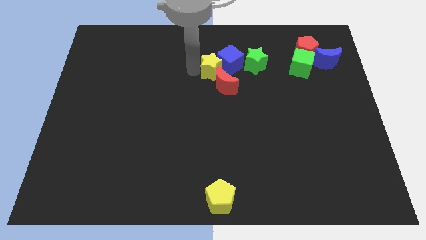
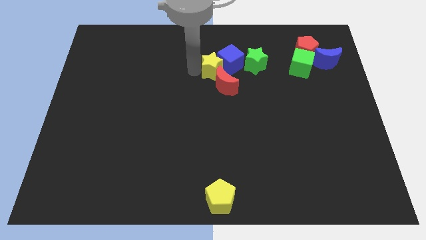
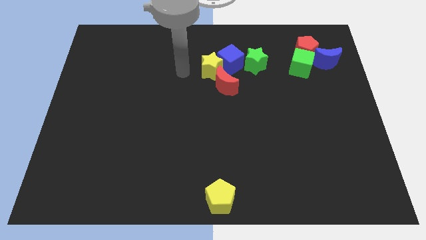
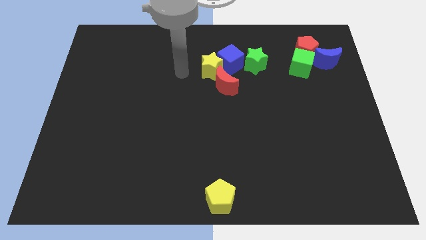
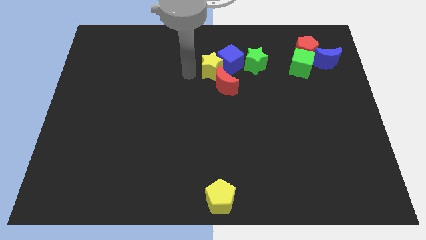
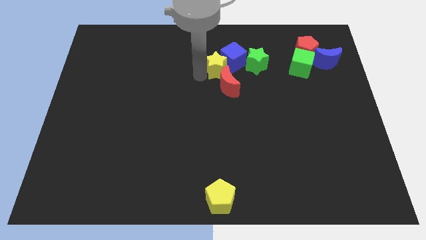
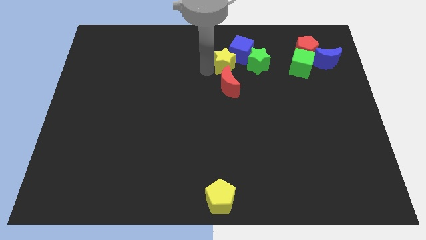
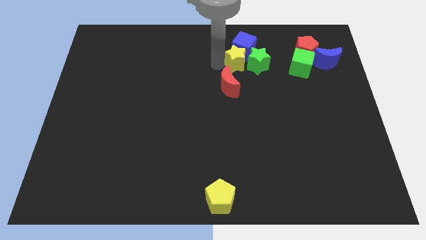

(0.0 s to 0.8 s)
place yellow star in between the blue cube and red moon

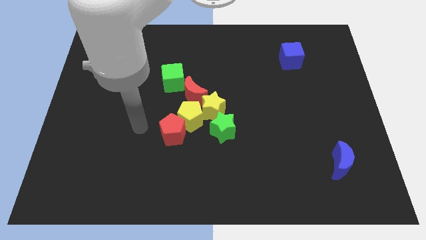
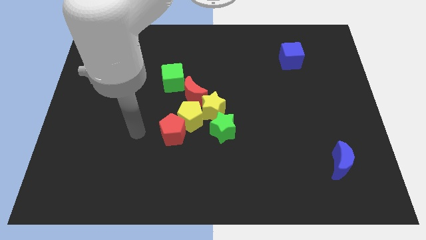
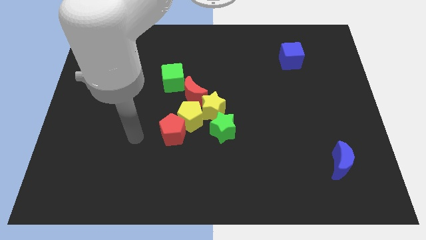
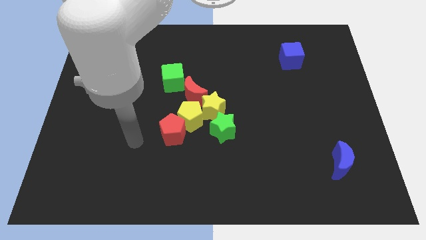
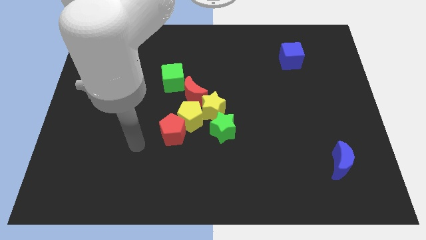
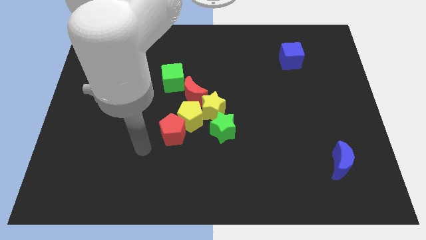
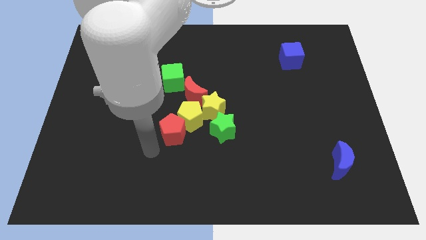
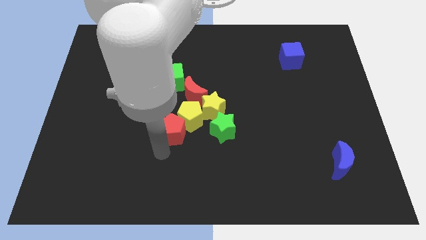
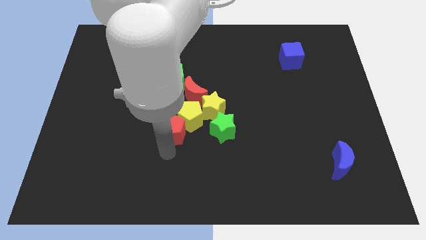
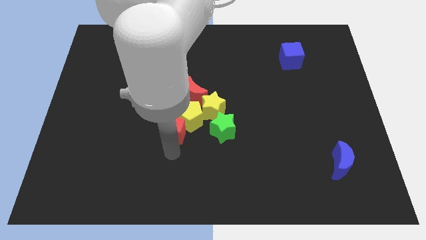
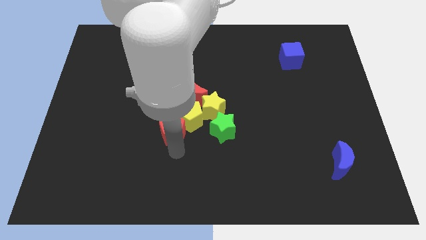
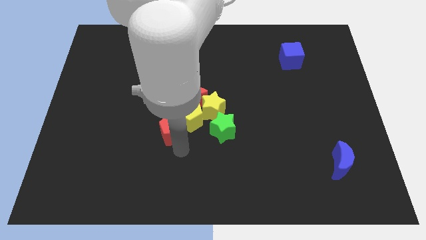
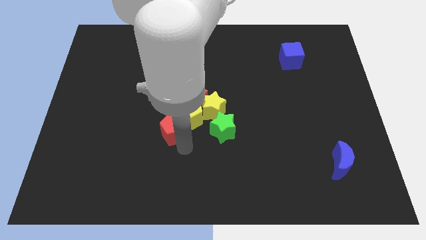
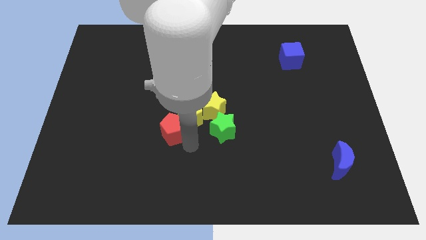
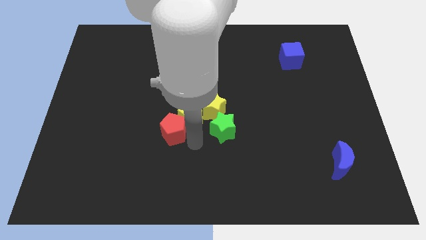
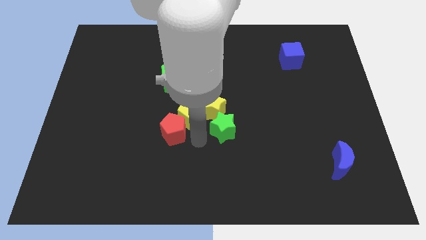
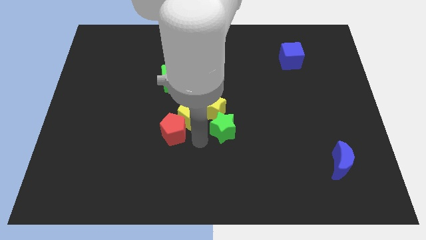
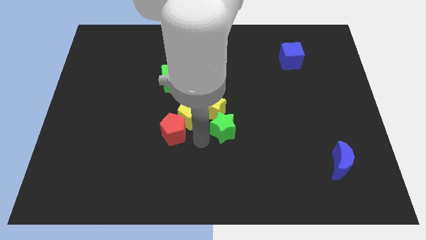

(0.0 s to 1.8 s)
move the arm close to green star

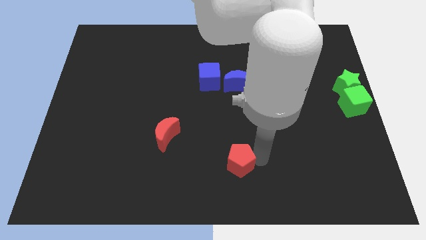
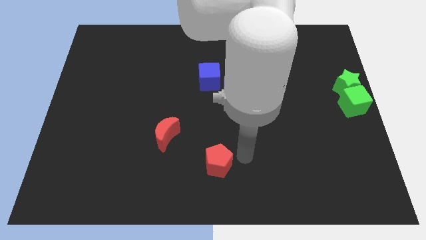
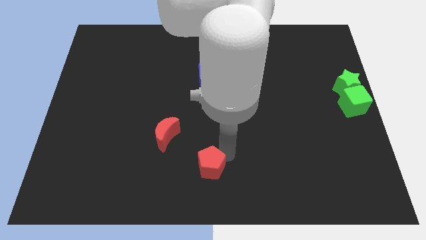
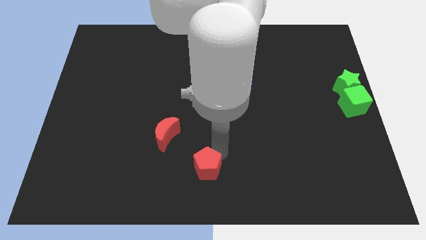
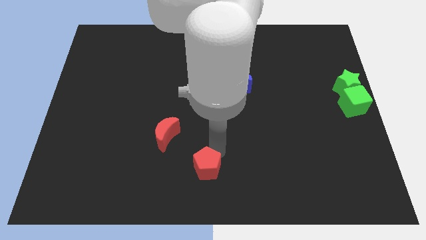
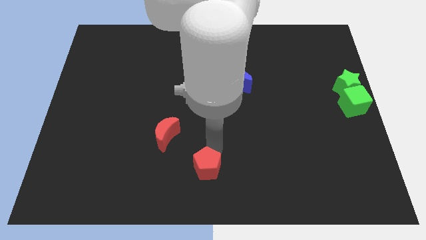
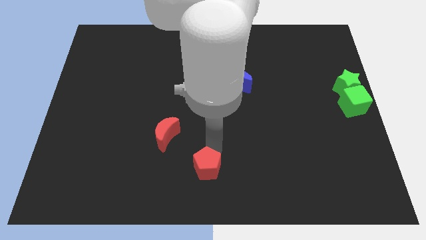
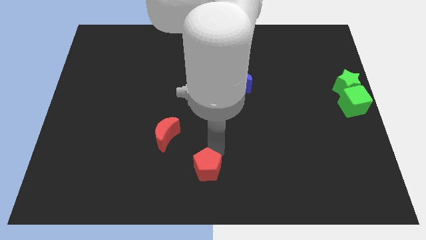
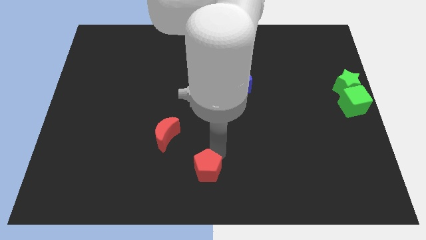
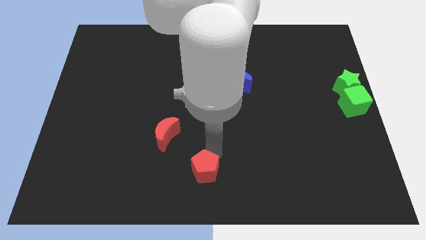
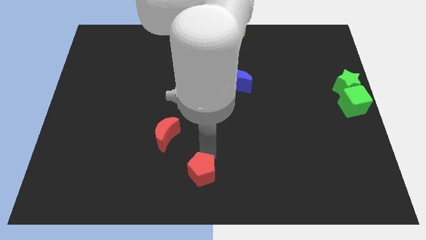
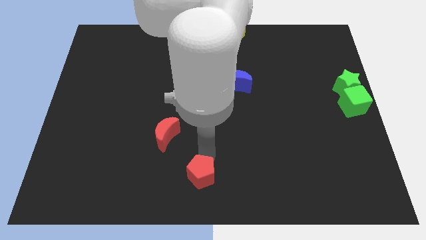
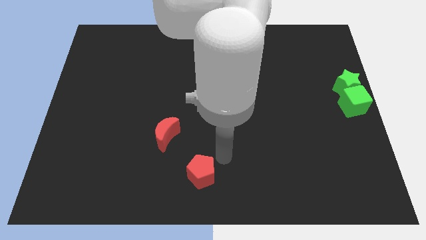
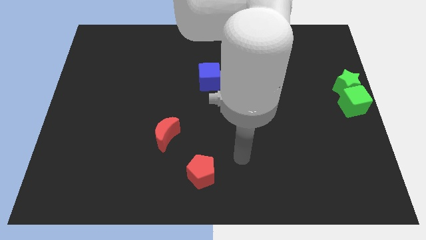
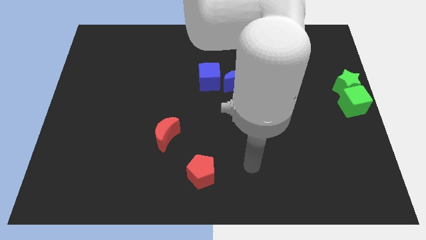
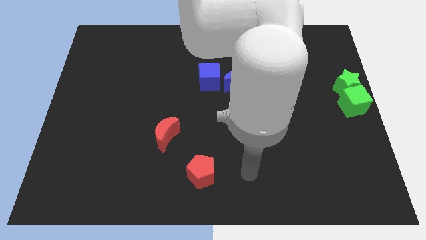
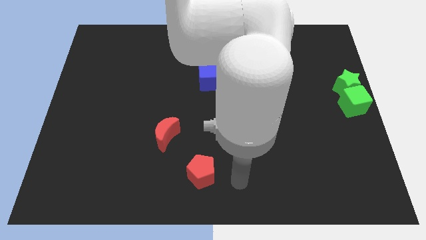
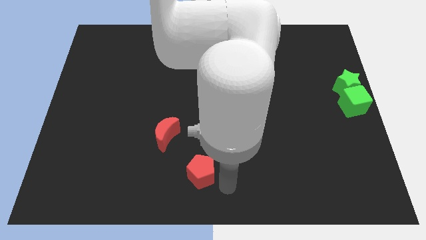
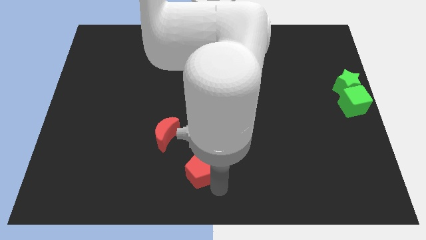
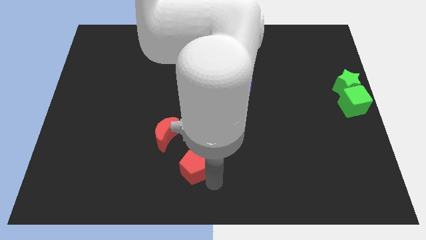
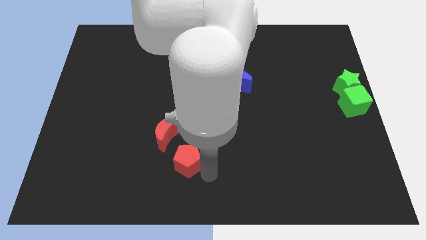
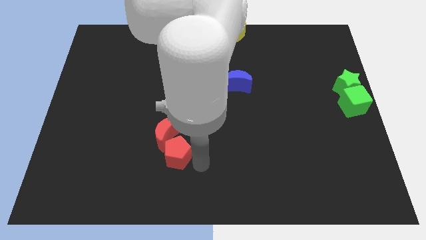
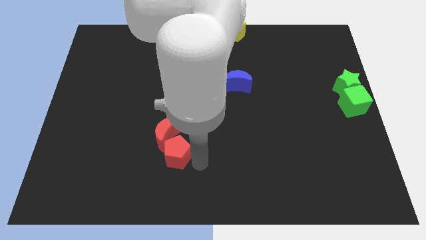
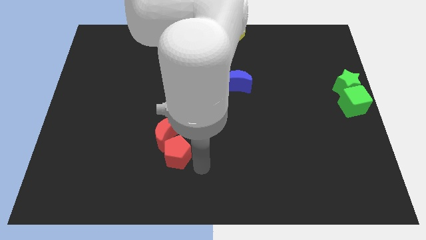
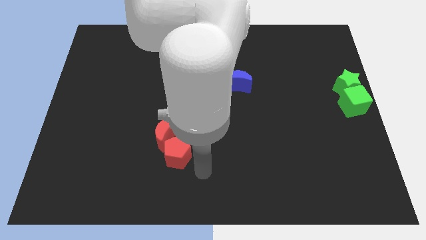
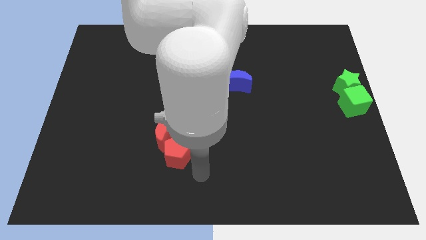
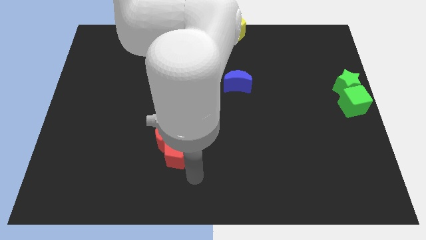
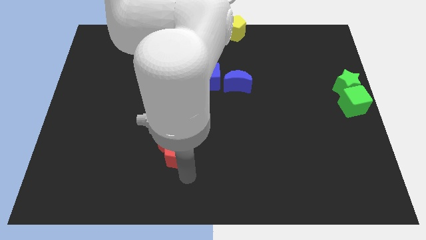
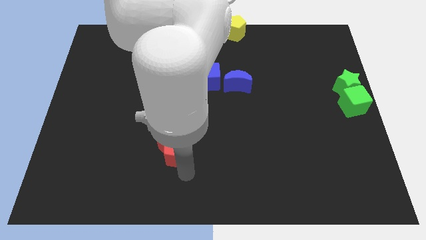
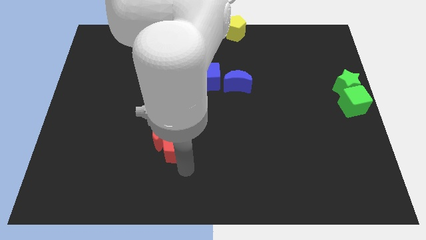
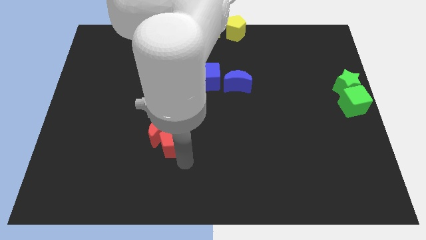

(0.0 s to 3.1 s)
push the red pentagon into the red crescent

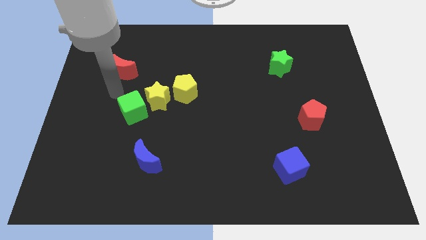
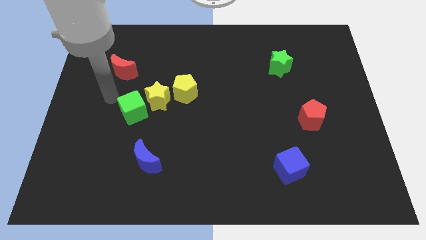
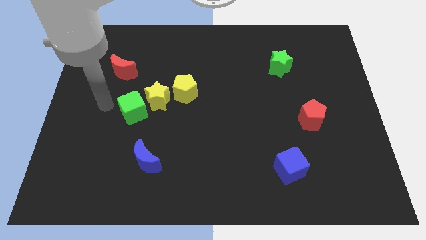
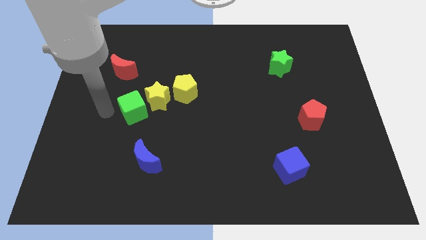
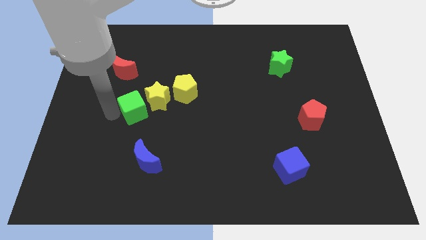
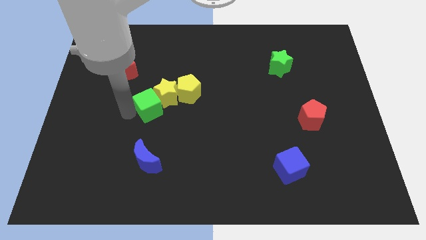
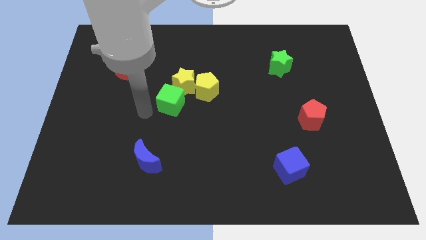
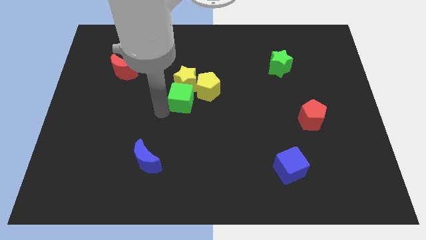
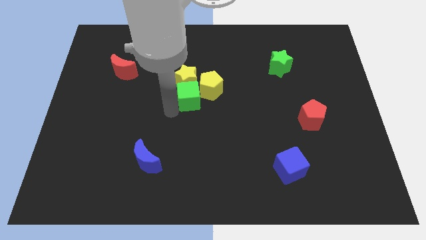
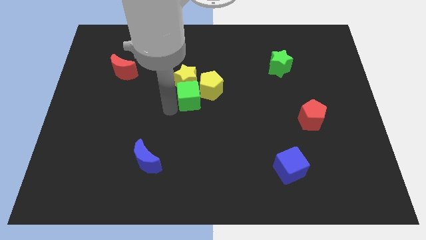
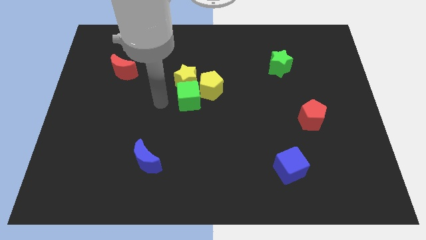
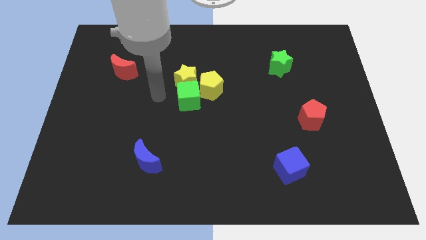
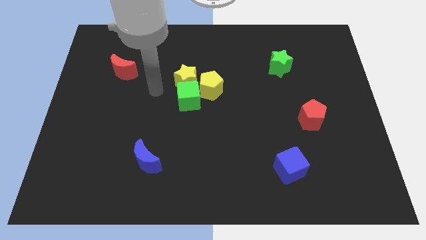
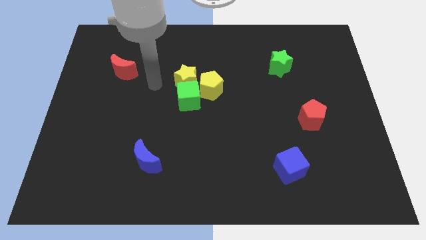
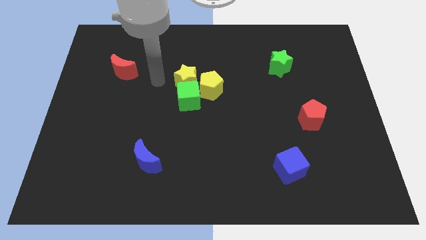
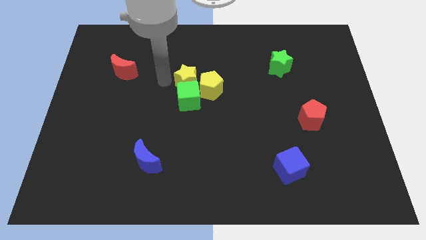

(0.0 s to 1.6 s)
push the green cube into the yellow blocks

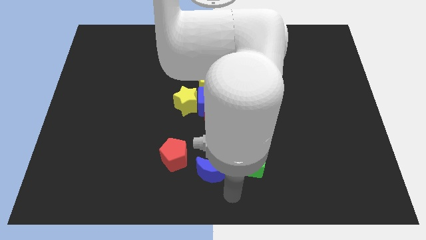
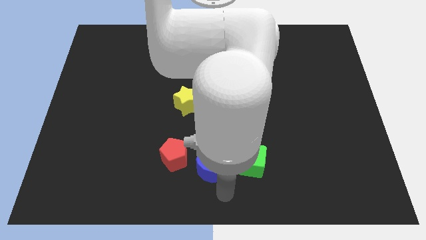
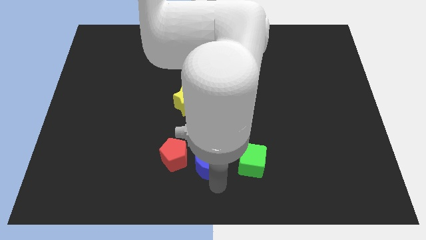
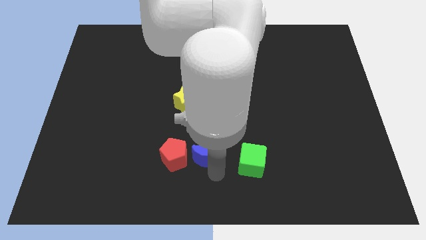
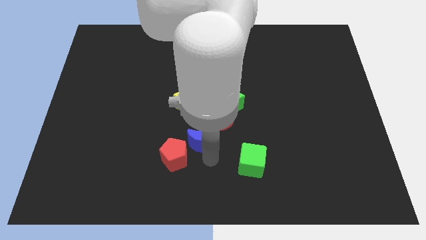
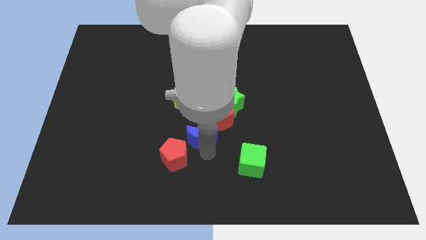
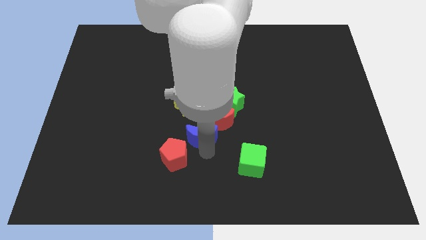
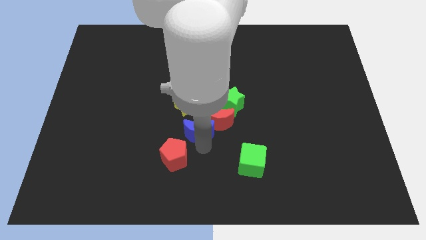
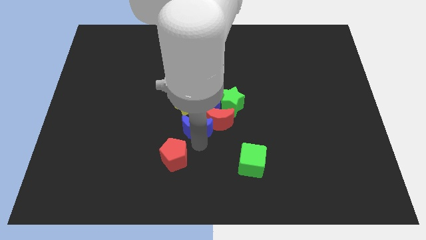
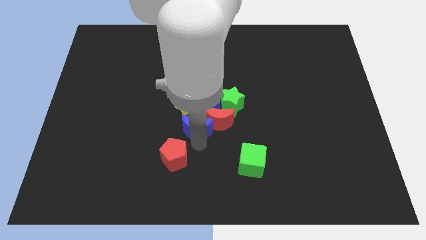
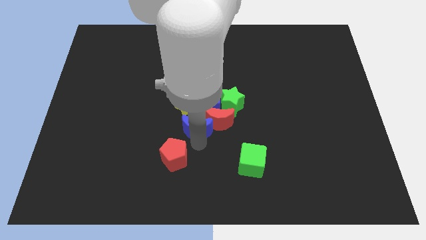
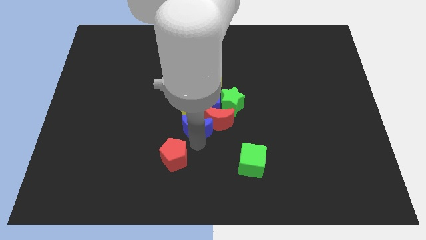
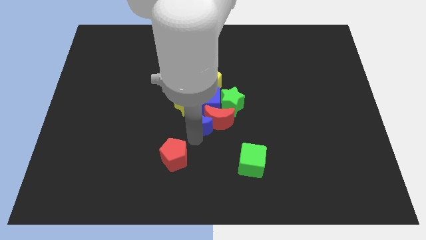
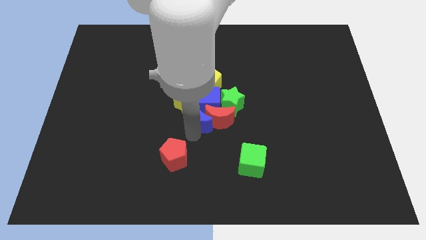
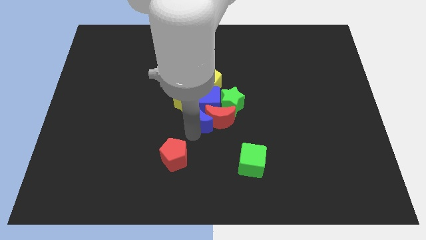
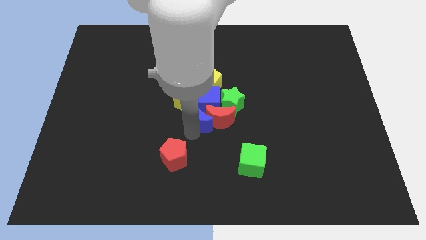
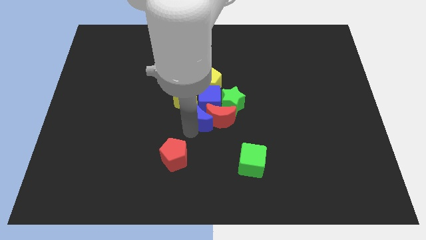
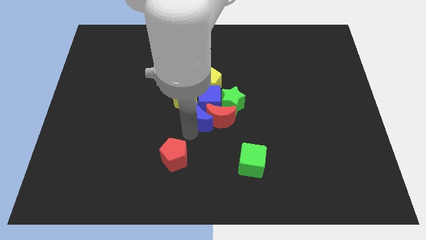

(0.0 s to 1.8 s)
push the blue crescent to the group of blocks
